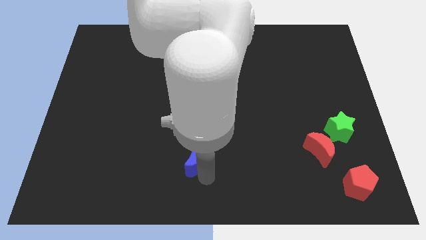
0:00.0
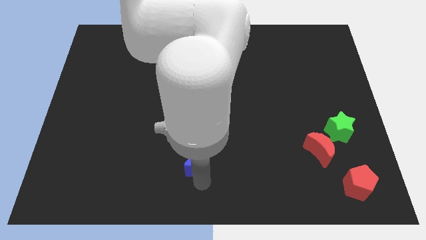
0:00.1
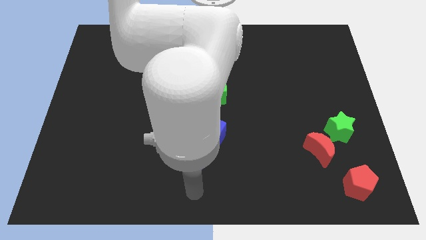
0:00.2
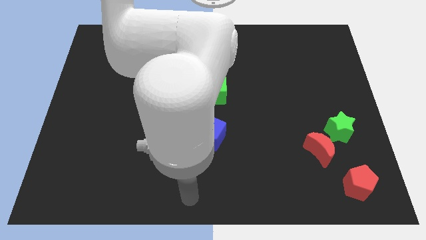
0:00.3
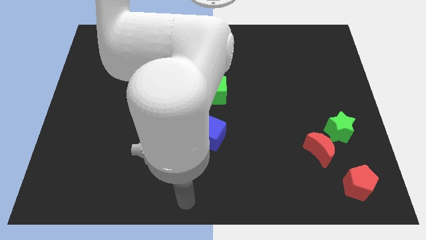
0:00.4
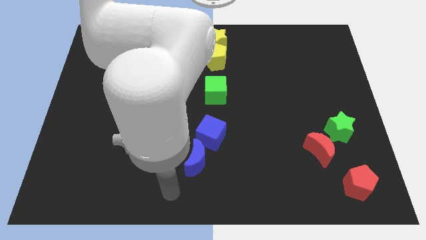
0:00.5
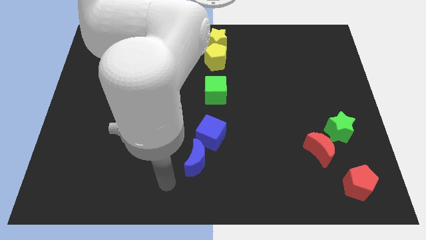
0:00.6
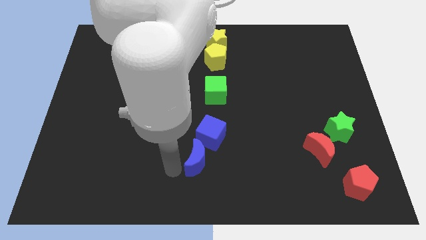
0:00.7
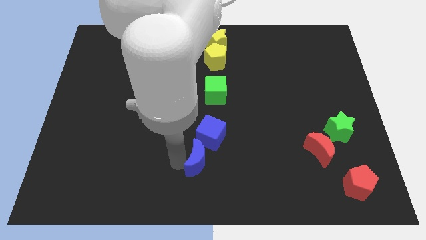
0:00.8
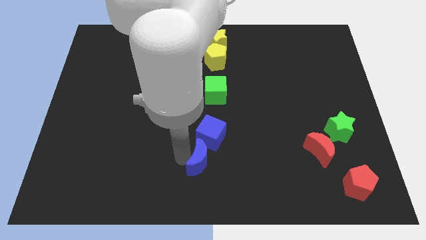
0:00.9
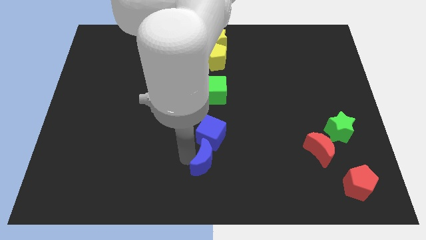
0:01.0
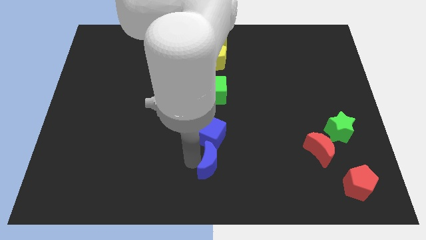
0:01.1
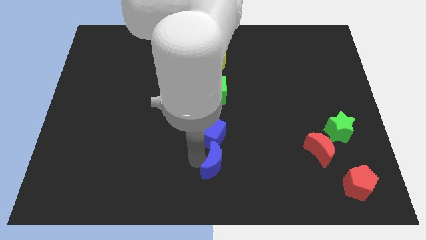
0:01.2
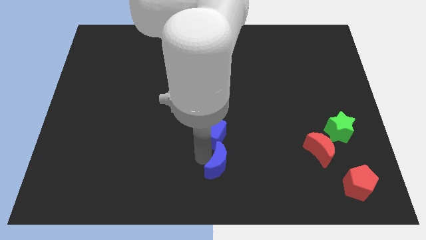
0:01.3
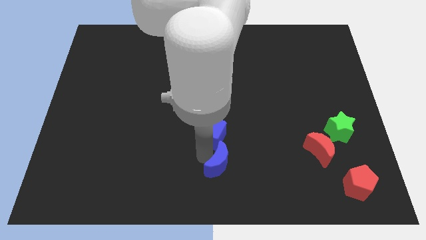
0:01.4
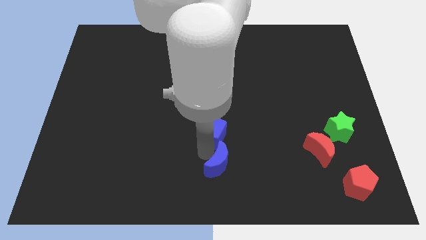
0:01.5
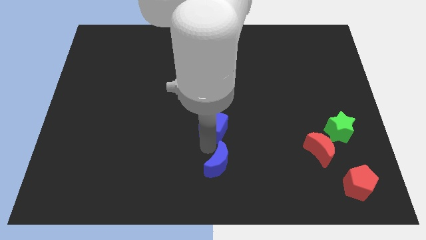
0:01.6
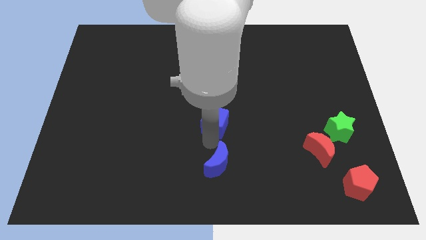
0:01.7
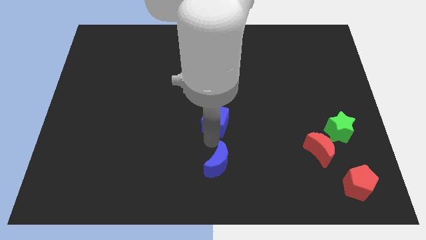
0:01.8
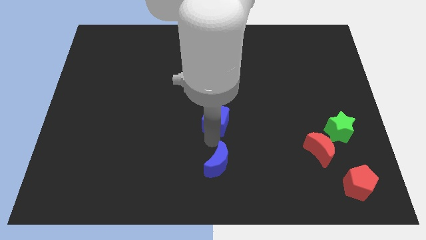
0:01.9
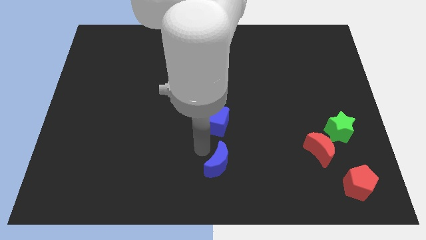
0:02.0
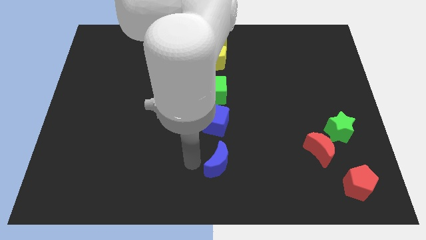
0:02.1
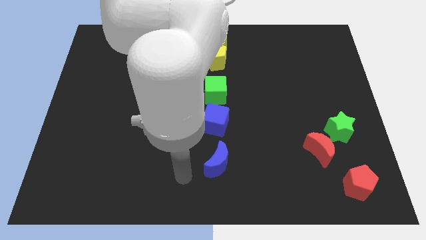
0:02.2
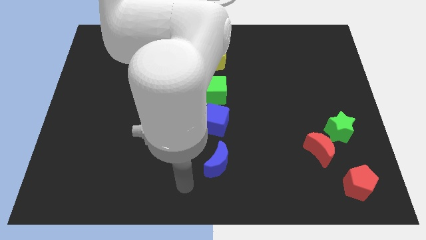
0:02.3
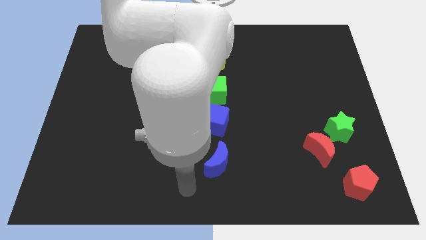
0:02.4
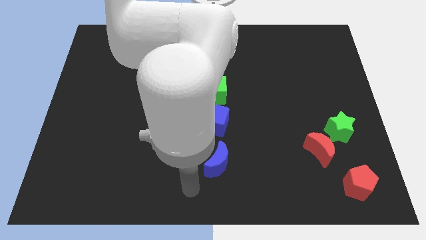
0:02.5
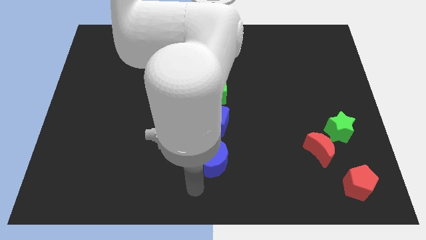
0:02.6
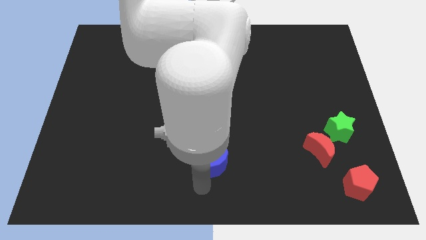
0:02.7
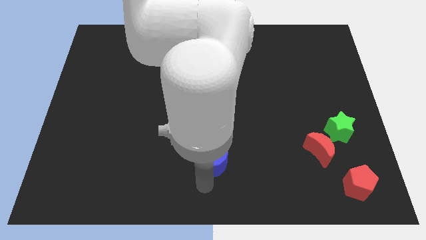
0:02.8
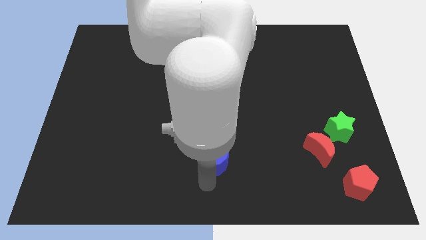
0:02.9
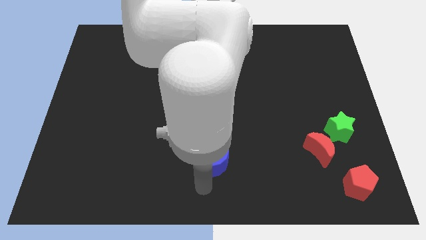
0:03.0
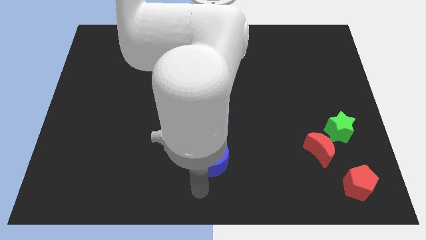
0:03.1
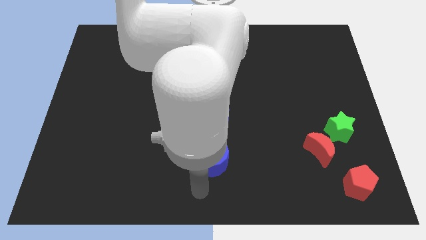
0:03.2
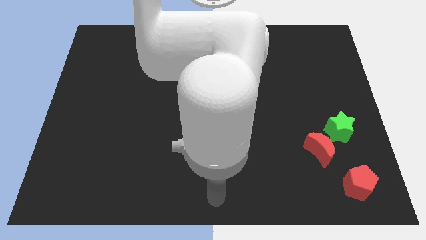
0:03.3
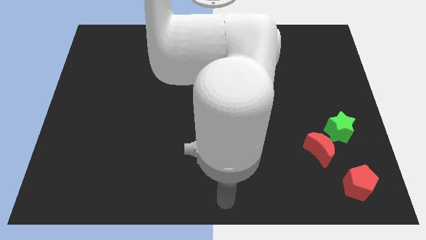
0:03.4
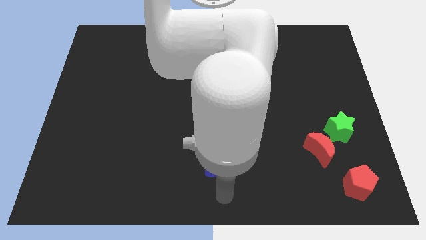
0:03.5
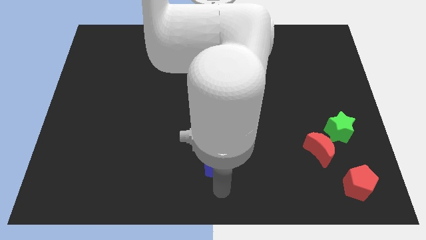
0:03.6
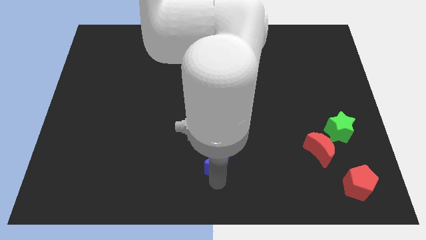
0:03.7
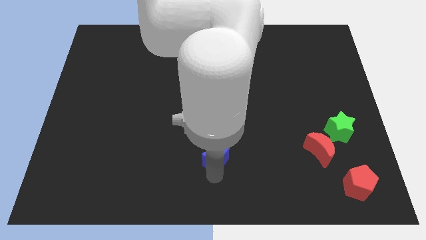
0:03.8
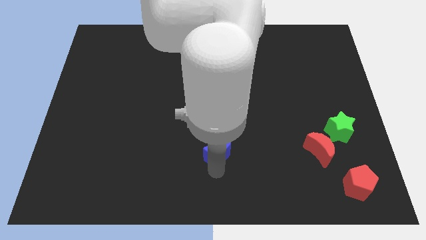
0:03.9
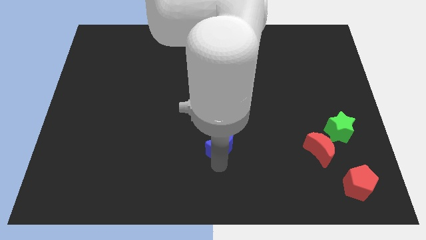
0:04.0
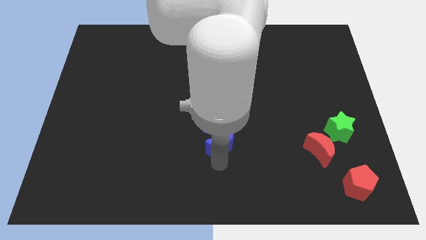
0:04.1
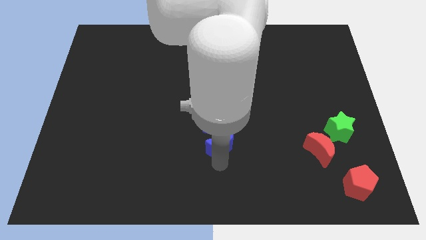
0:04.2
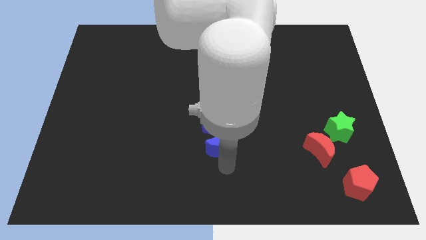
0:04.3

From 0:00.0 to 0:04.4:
place blue moon and blue cube below the green cube

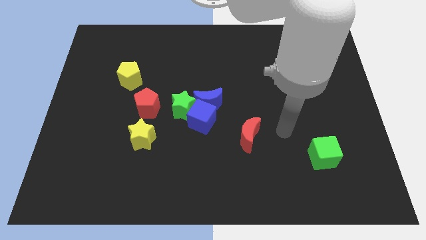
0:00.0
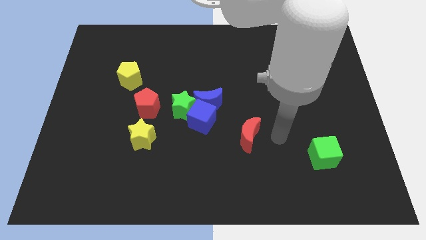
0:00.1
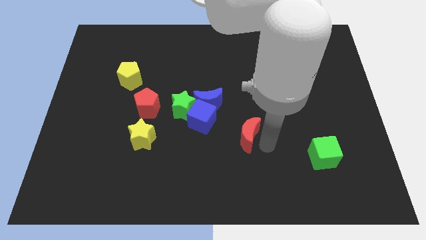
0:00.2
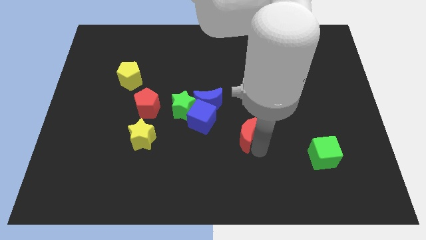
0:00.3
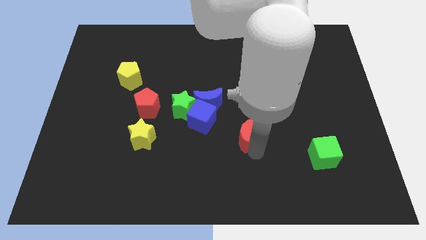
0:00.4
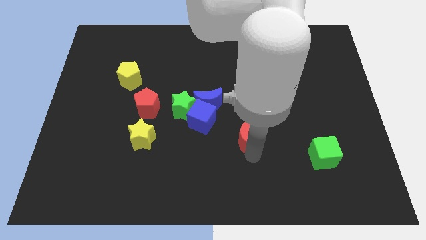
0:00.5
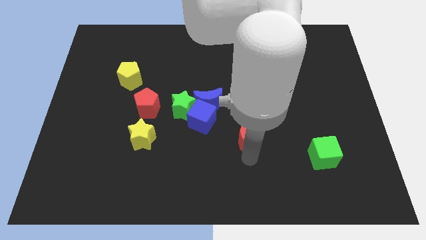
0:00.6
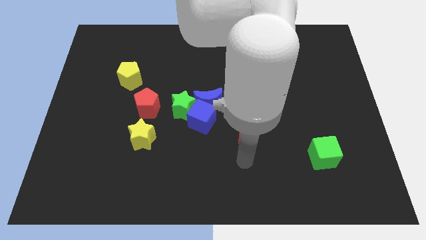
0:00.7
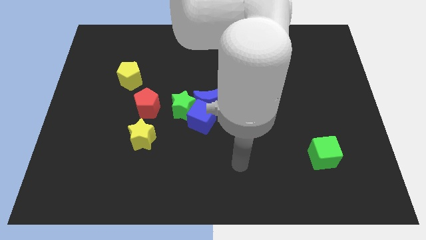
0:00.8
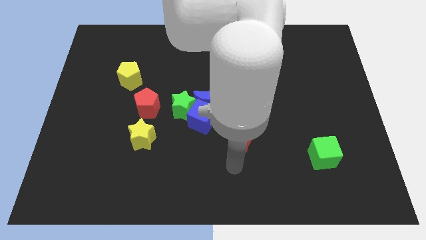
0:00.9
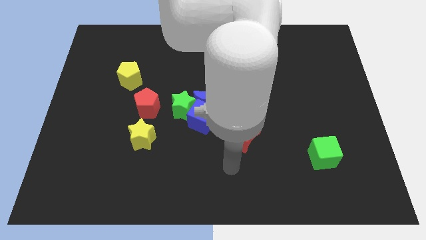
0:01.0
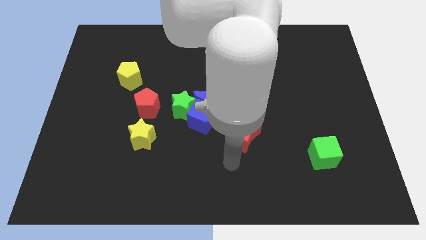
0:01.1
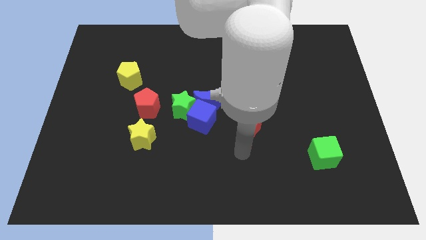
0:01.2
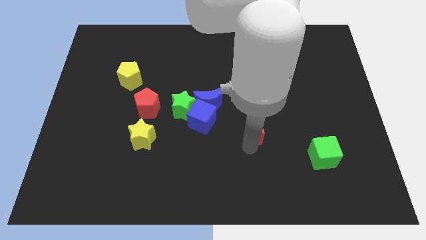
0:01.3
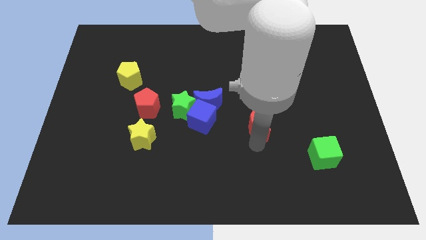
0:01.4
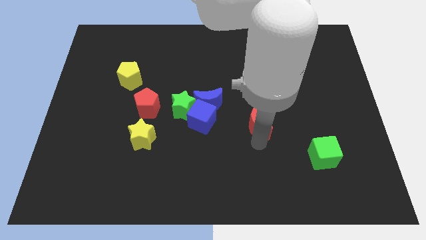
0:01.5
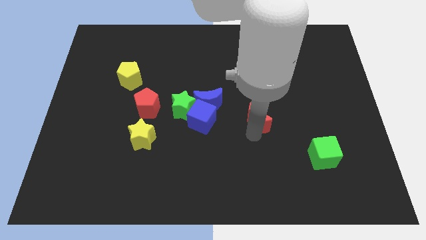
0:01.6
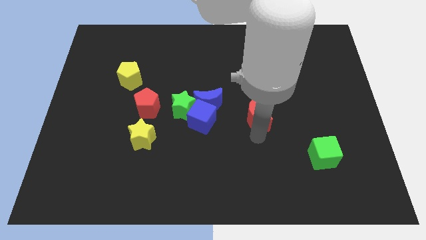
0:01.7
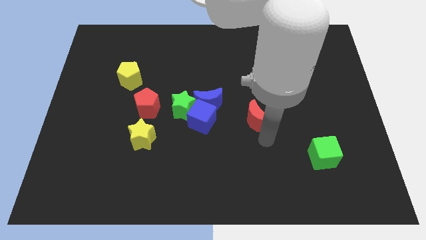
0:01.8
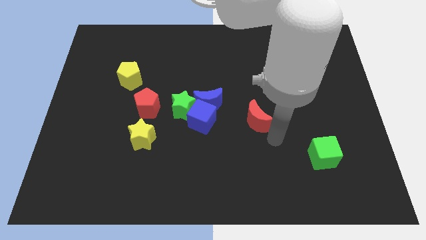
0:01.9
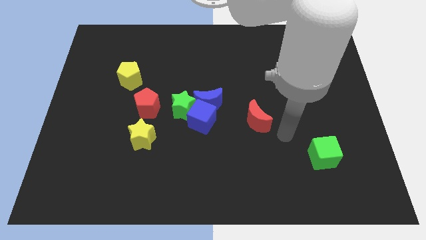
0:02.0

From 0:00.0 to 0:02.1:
push red crescent parallel right to the blue cube

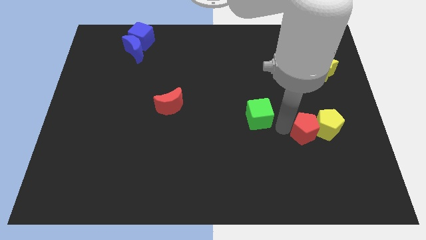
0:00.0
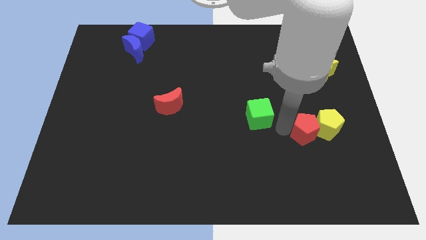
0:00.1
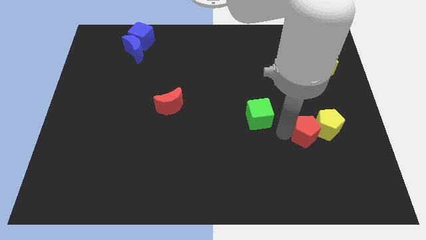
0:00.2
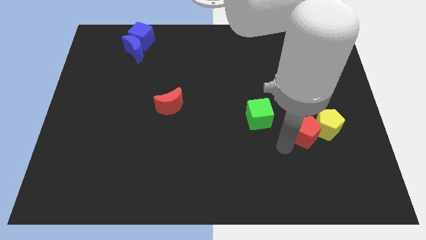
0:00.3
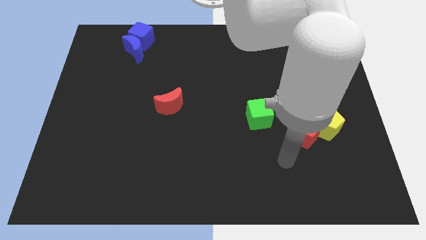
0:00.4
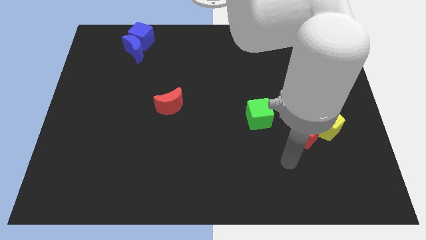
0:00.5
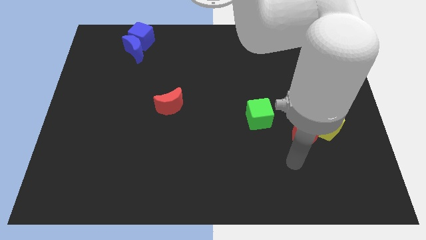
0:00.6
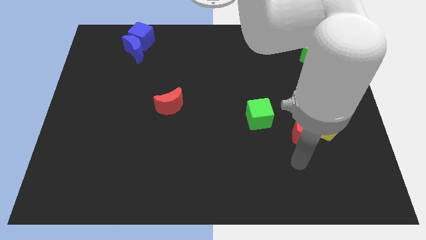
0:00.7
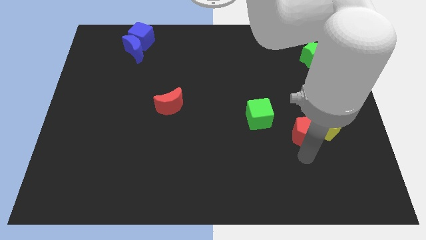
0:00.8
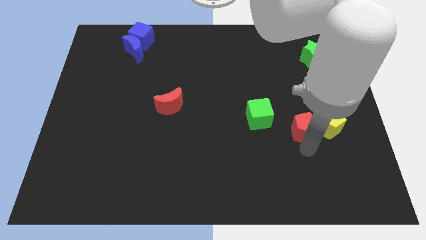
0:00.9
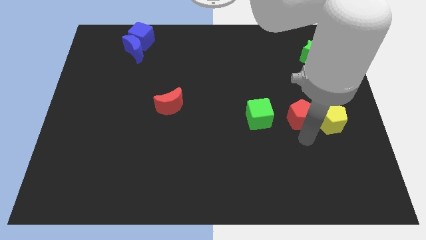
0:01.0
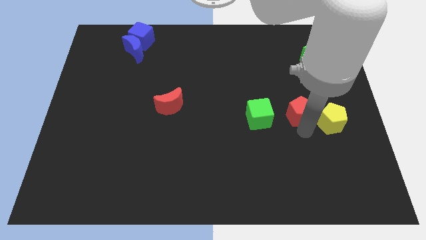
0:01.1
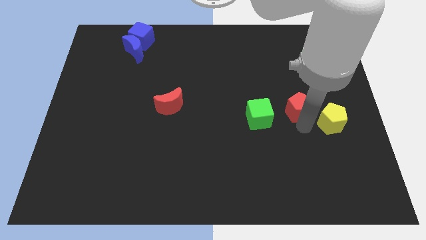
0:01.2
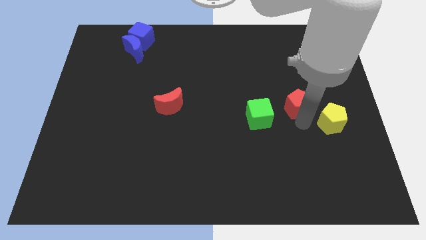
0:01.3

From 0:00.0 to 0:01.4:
push the red pentagon towards the top of the board

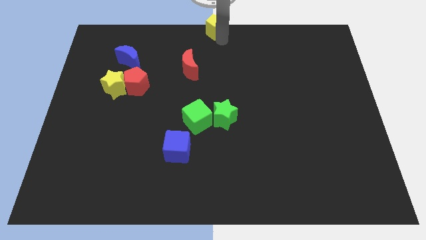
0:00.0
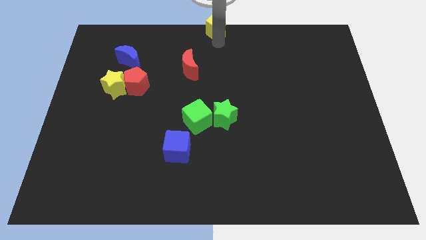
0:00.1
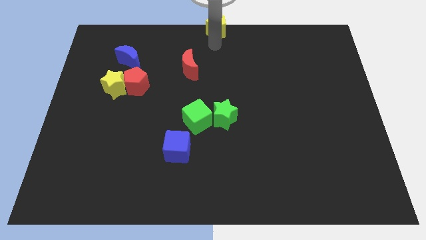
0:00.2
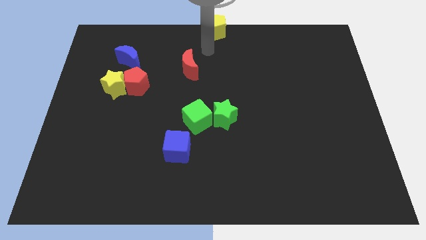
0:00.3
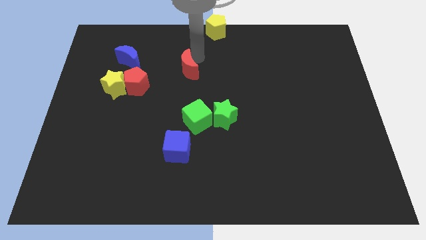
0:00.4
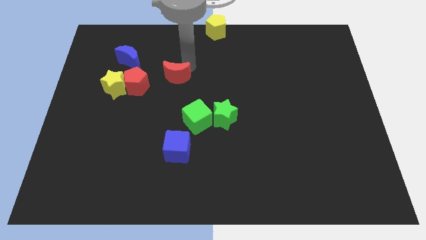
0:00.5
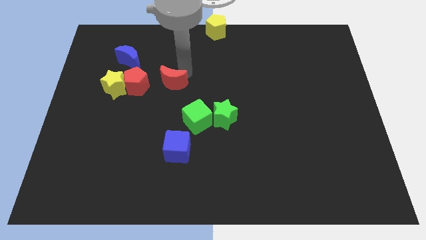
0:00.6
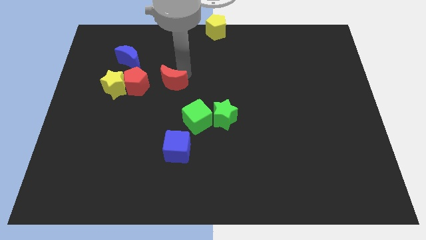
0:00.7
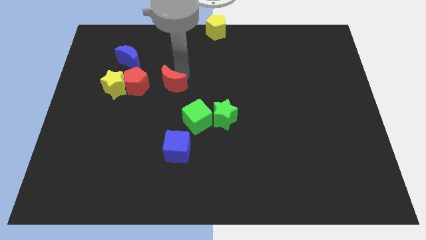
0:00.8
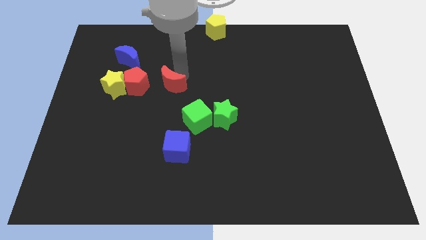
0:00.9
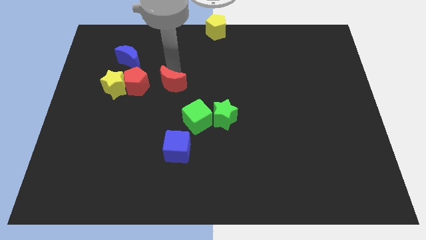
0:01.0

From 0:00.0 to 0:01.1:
move red moon to right of red pentagon
